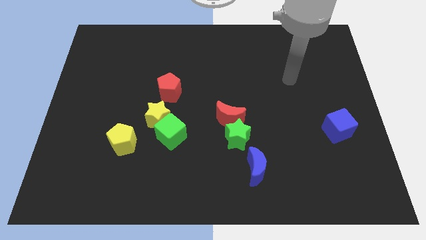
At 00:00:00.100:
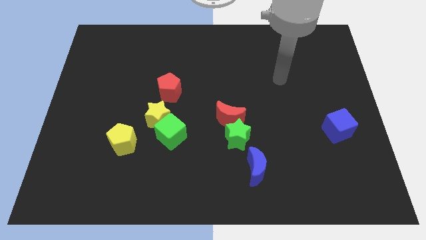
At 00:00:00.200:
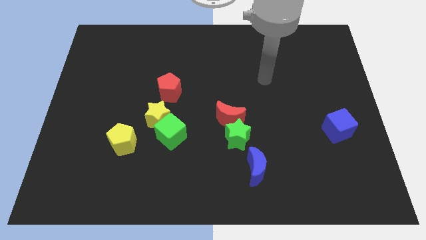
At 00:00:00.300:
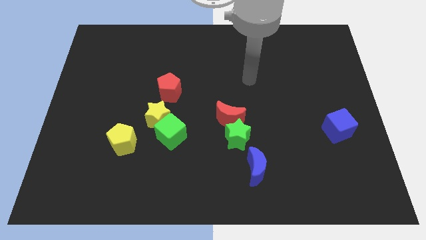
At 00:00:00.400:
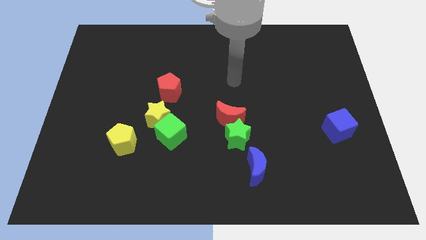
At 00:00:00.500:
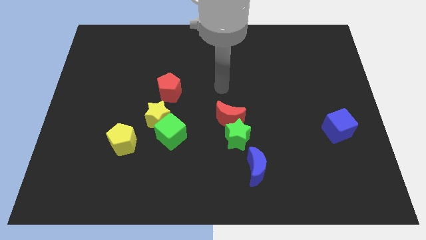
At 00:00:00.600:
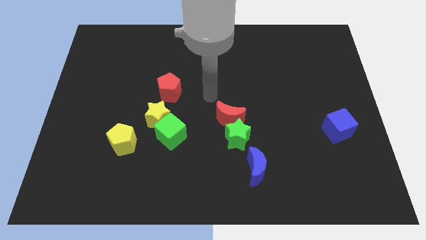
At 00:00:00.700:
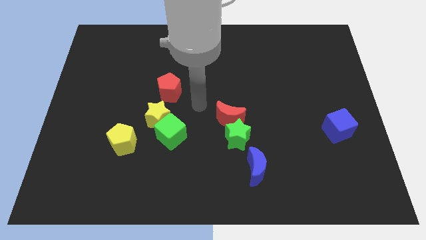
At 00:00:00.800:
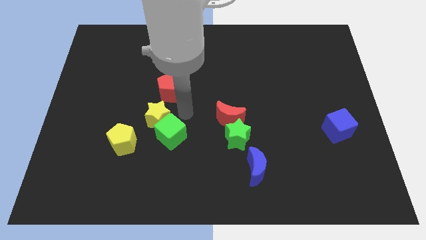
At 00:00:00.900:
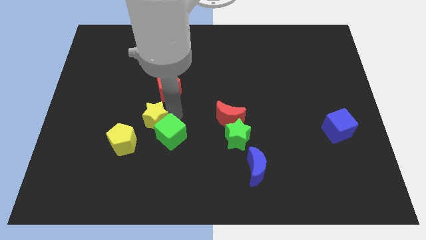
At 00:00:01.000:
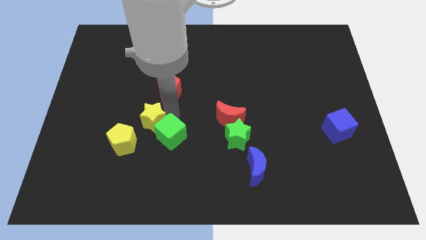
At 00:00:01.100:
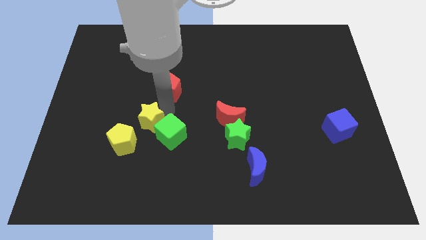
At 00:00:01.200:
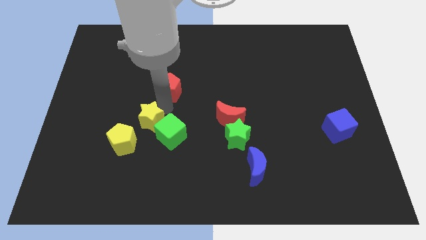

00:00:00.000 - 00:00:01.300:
point your arm at the right of the yellow star

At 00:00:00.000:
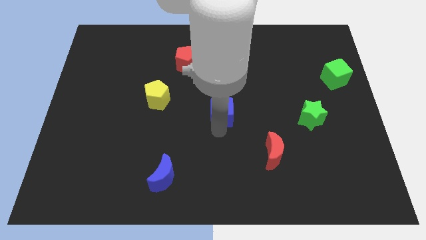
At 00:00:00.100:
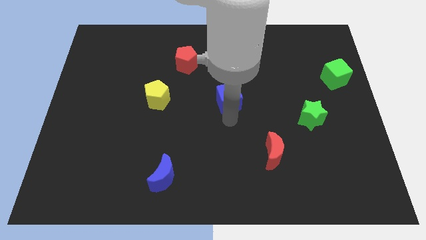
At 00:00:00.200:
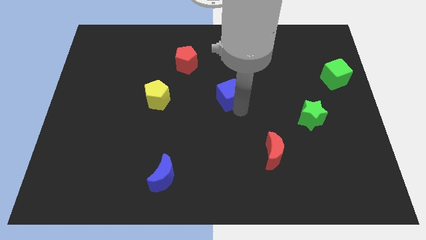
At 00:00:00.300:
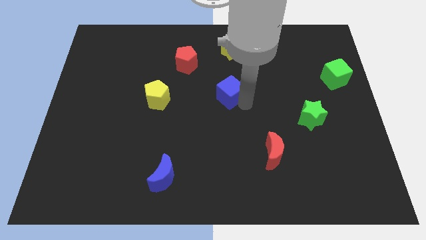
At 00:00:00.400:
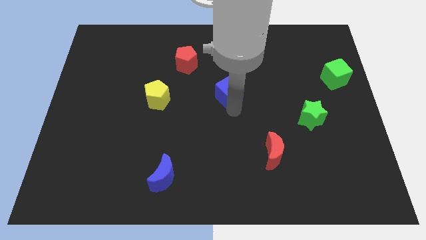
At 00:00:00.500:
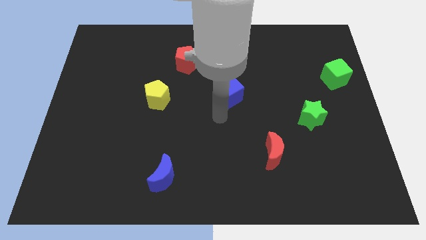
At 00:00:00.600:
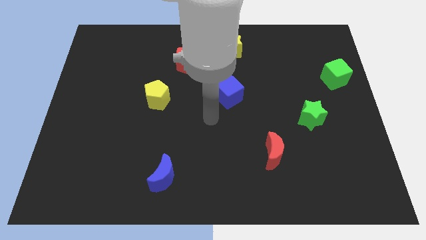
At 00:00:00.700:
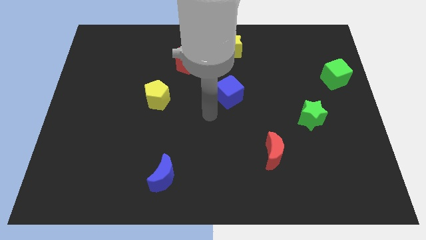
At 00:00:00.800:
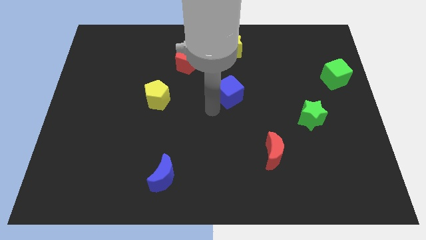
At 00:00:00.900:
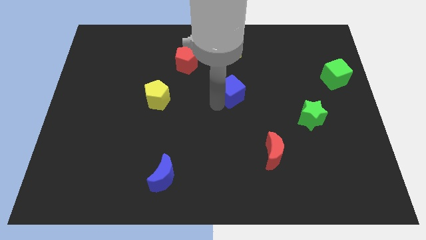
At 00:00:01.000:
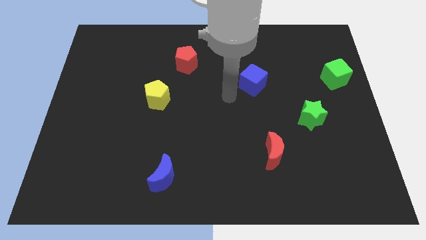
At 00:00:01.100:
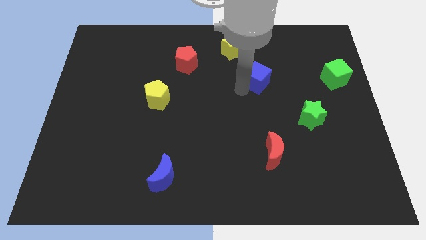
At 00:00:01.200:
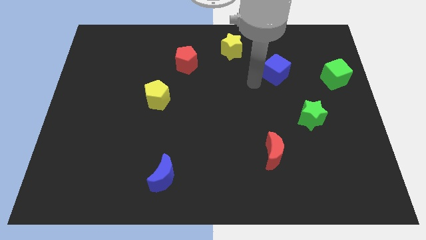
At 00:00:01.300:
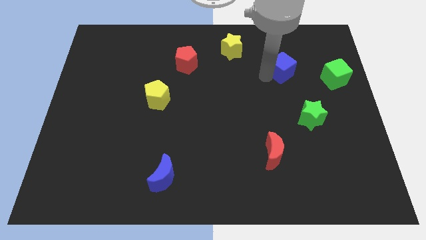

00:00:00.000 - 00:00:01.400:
place the blue cube between the yellow star and green cube

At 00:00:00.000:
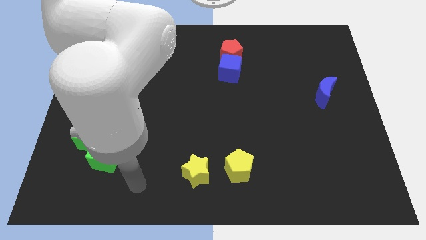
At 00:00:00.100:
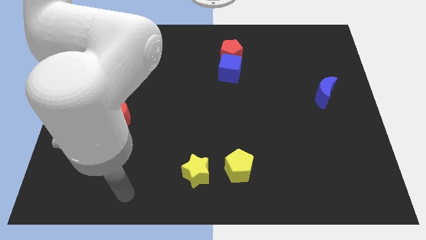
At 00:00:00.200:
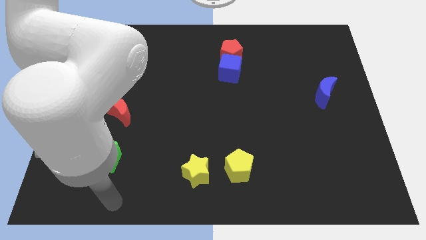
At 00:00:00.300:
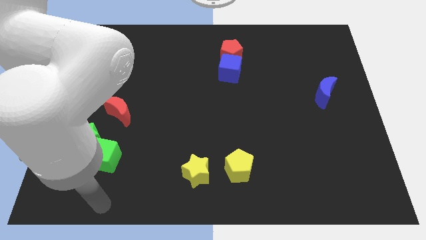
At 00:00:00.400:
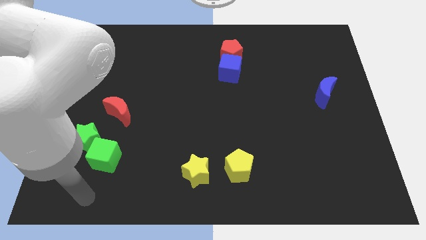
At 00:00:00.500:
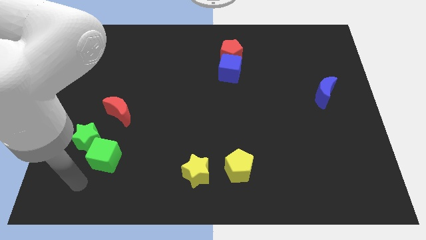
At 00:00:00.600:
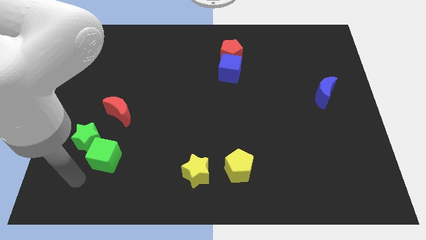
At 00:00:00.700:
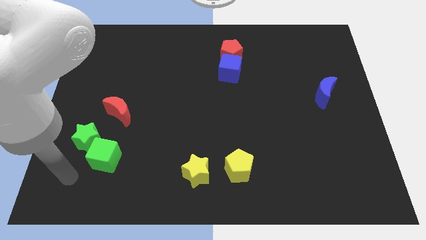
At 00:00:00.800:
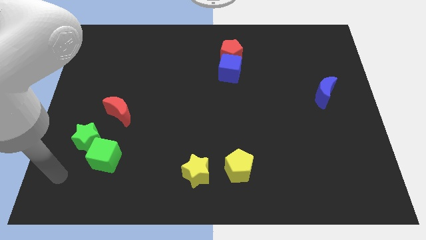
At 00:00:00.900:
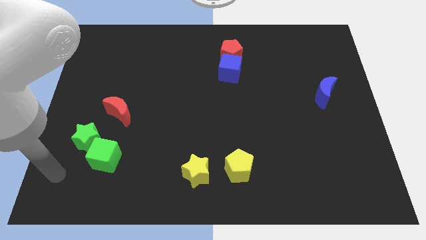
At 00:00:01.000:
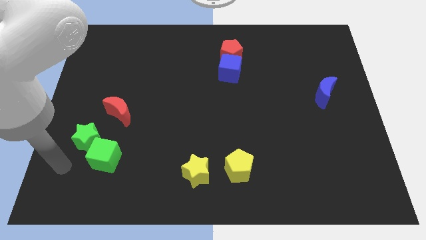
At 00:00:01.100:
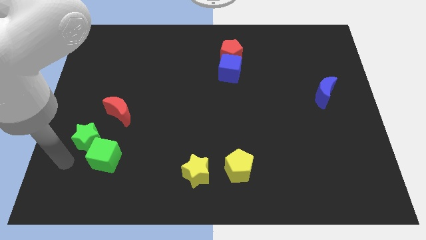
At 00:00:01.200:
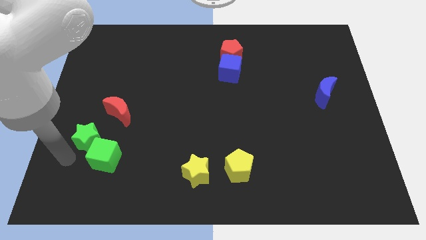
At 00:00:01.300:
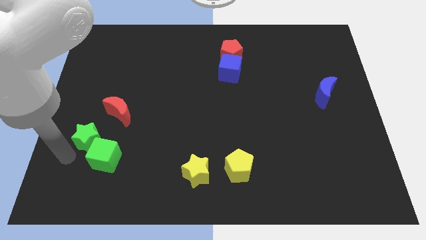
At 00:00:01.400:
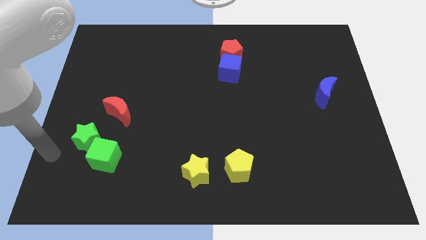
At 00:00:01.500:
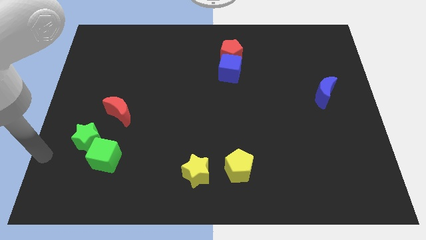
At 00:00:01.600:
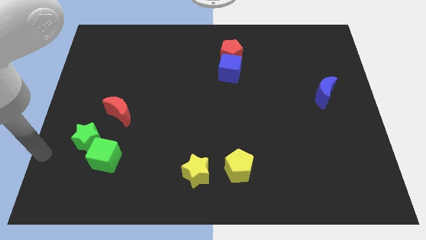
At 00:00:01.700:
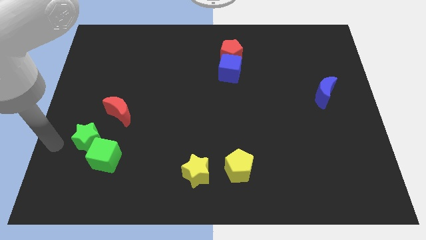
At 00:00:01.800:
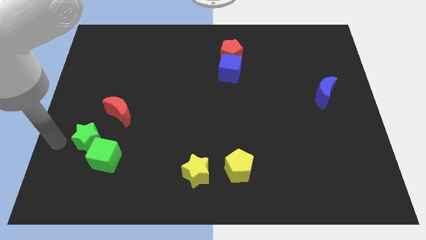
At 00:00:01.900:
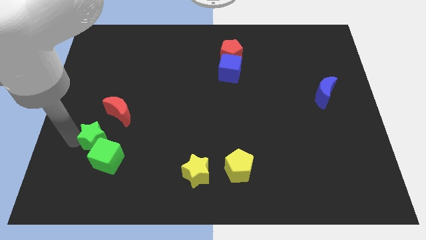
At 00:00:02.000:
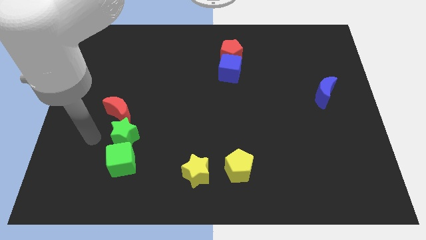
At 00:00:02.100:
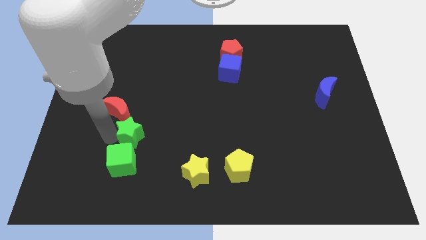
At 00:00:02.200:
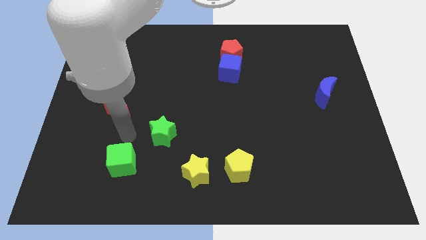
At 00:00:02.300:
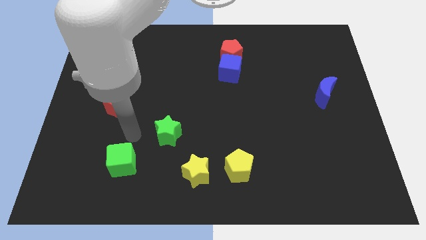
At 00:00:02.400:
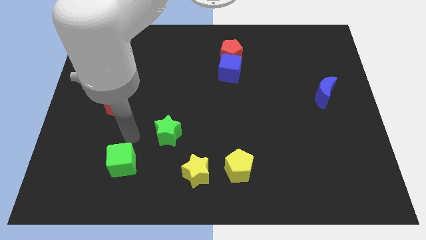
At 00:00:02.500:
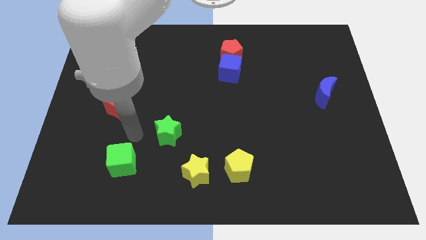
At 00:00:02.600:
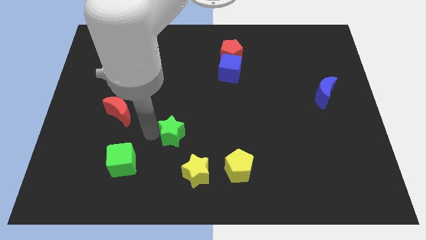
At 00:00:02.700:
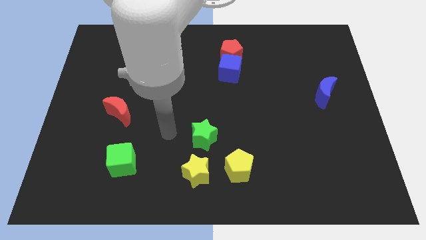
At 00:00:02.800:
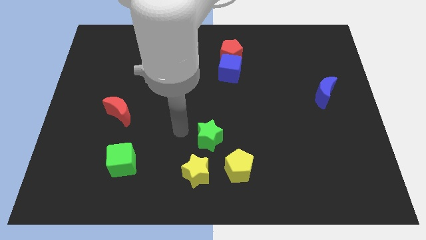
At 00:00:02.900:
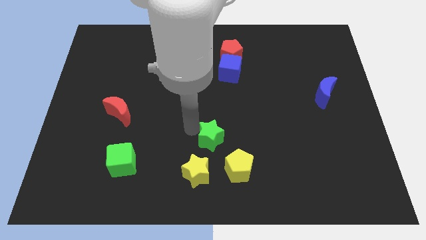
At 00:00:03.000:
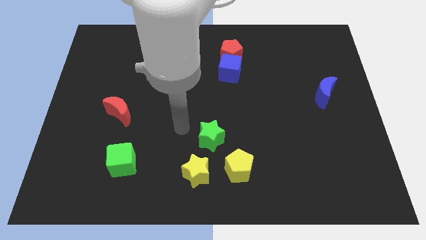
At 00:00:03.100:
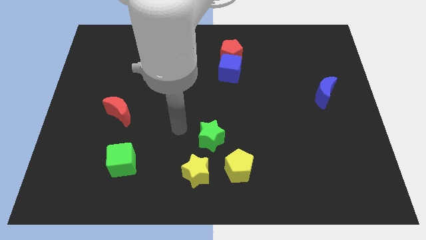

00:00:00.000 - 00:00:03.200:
move the green star to the top side of the yellow star and yellow pentagon

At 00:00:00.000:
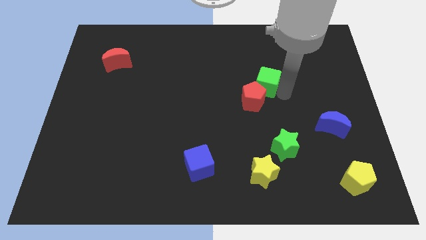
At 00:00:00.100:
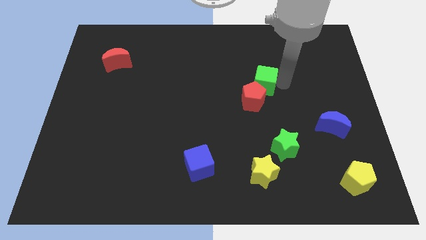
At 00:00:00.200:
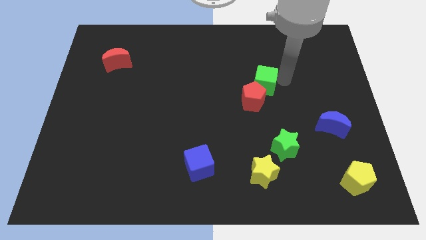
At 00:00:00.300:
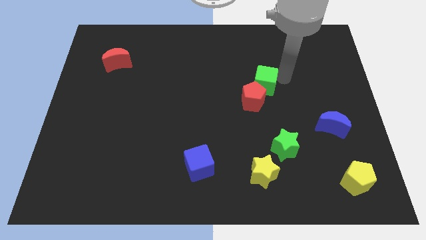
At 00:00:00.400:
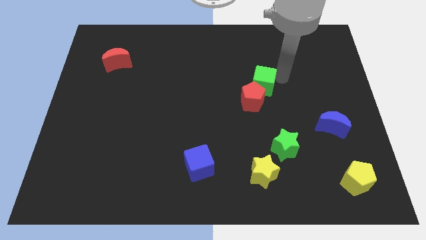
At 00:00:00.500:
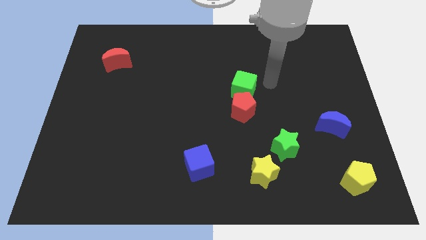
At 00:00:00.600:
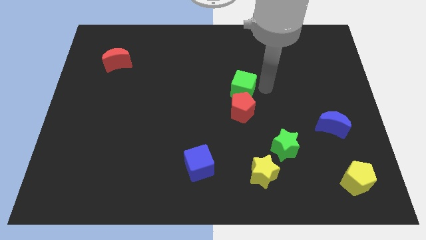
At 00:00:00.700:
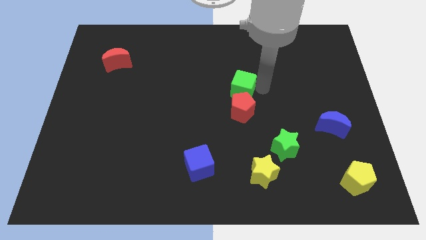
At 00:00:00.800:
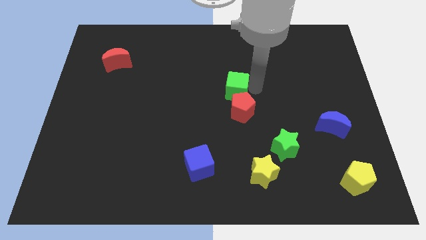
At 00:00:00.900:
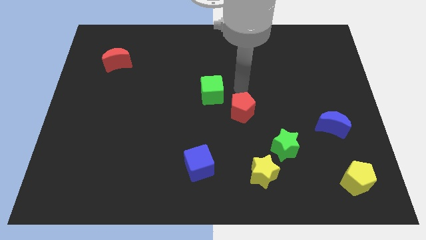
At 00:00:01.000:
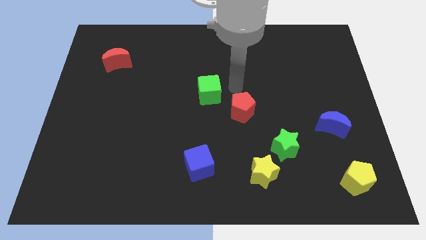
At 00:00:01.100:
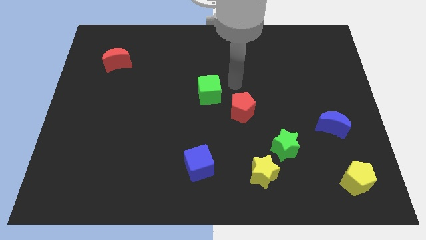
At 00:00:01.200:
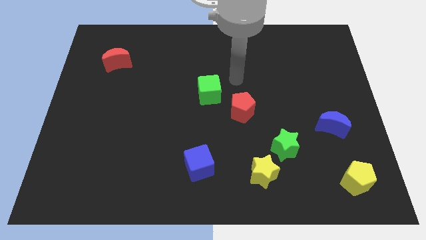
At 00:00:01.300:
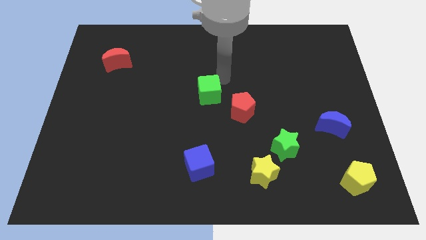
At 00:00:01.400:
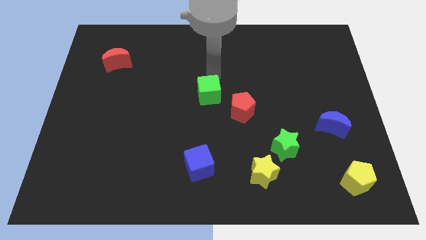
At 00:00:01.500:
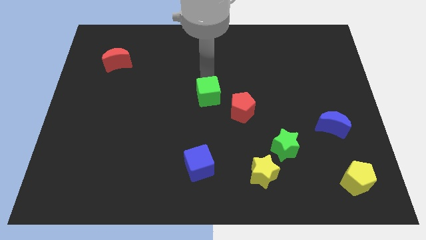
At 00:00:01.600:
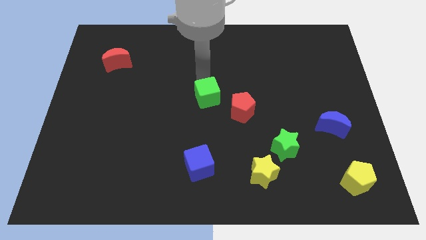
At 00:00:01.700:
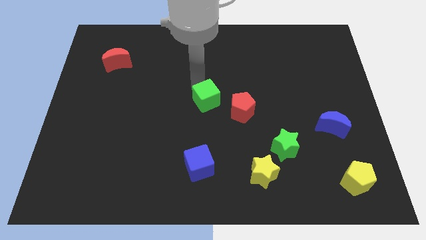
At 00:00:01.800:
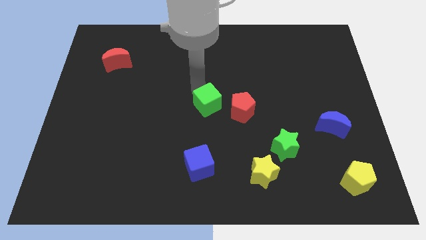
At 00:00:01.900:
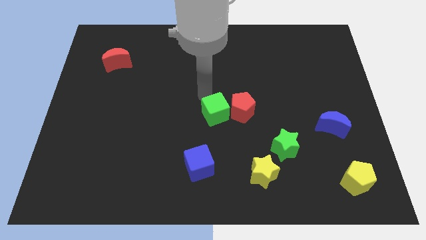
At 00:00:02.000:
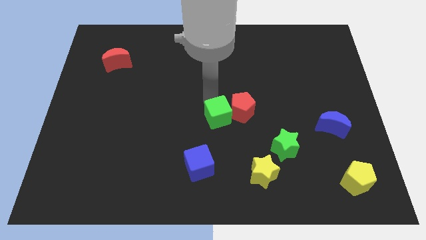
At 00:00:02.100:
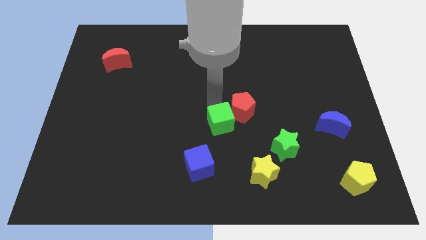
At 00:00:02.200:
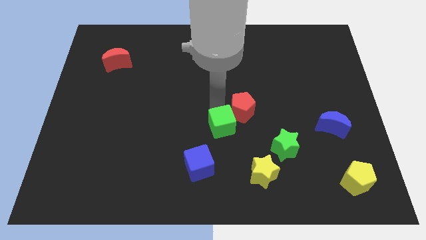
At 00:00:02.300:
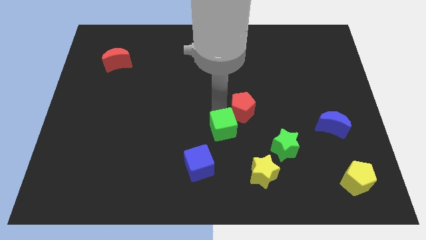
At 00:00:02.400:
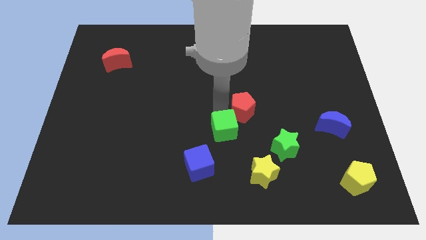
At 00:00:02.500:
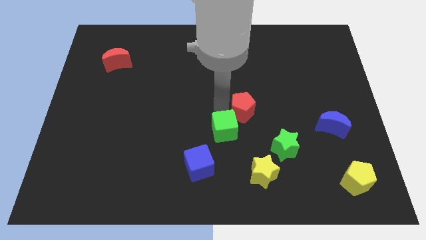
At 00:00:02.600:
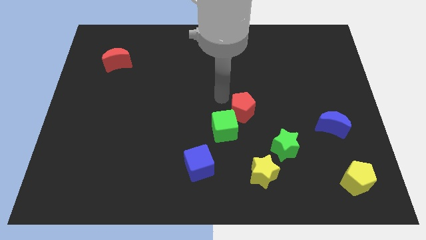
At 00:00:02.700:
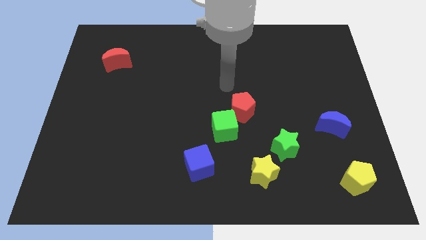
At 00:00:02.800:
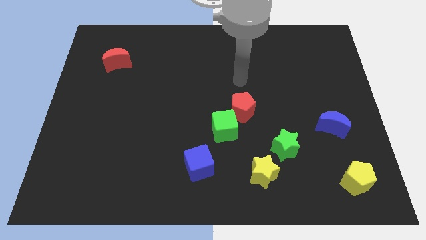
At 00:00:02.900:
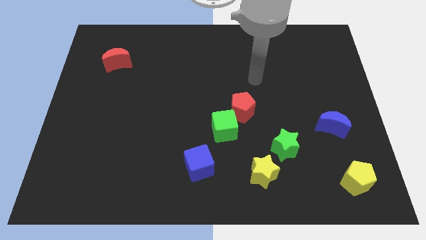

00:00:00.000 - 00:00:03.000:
place the green cube in between the red pentagon and blue cube
